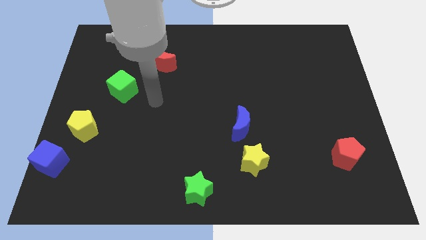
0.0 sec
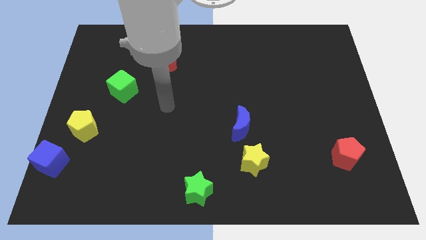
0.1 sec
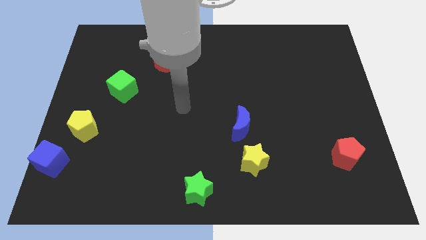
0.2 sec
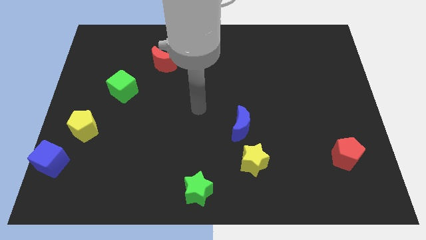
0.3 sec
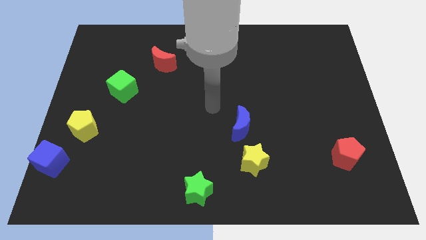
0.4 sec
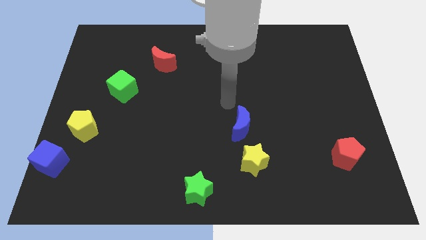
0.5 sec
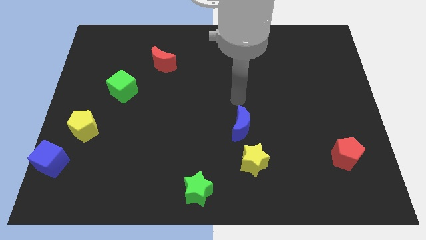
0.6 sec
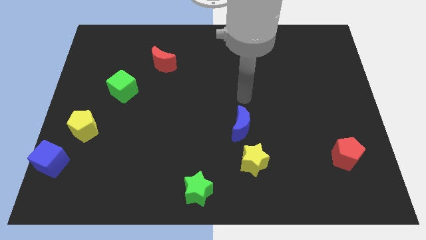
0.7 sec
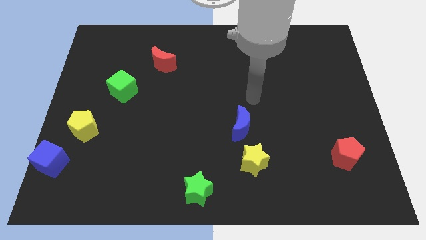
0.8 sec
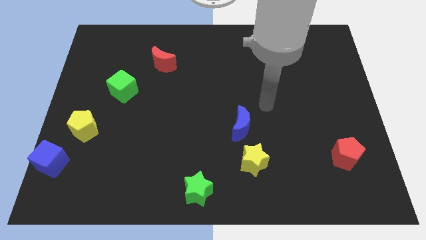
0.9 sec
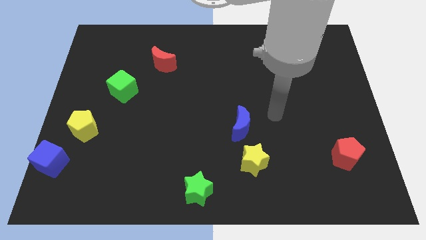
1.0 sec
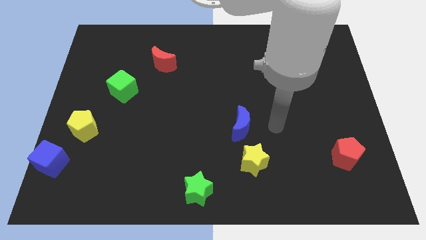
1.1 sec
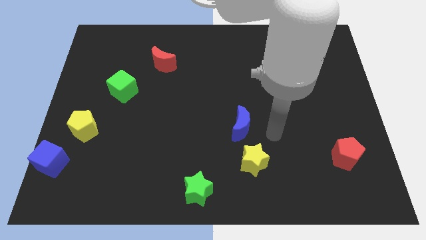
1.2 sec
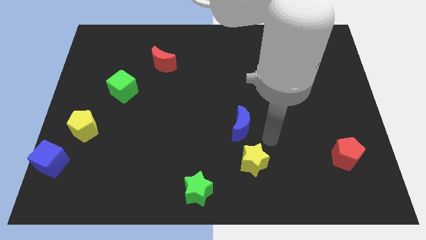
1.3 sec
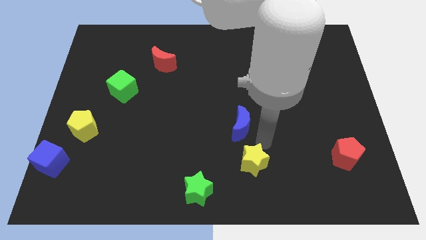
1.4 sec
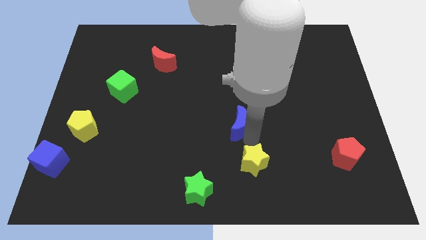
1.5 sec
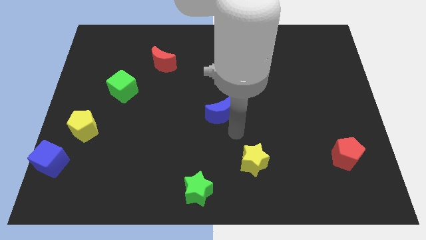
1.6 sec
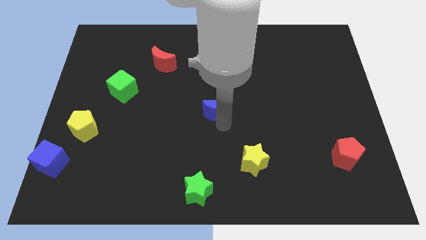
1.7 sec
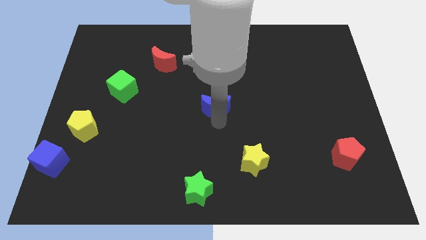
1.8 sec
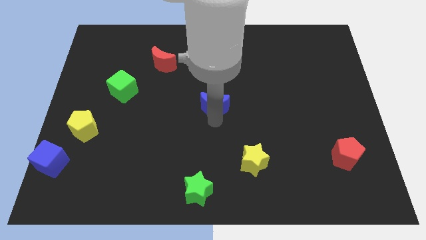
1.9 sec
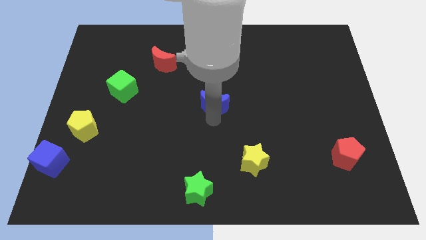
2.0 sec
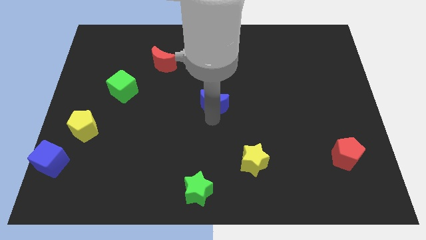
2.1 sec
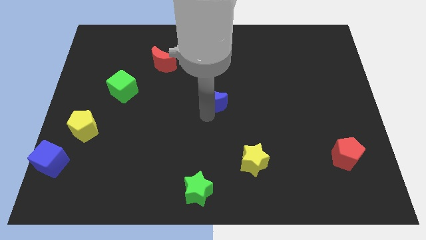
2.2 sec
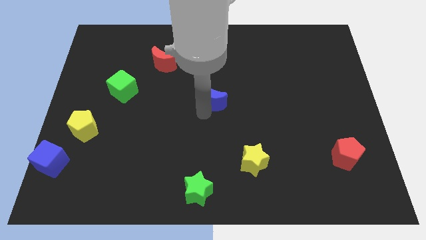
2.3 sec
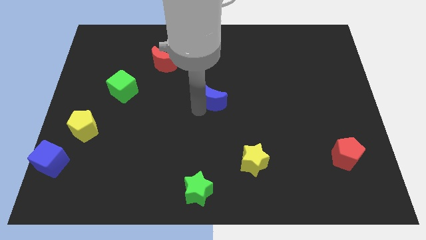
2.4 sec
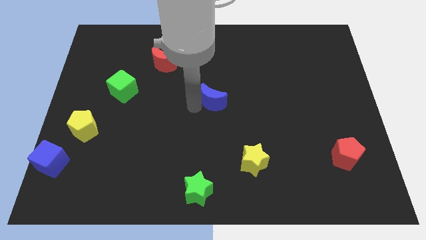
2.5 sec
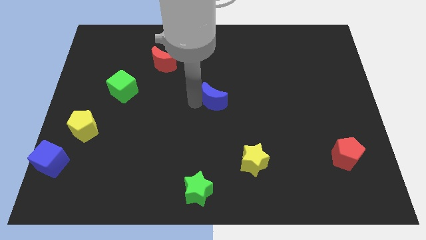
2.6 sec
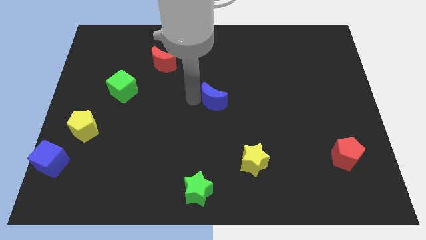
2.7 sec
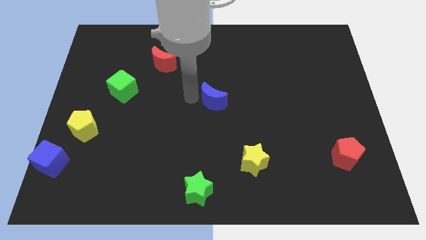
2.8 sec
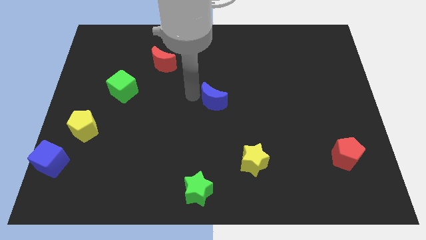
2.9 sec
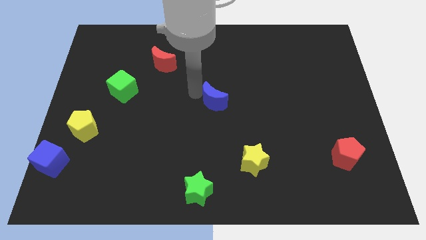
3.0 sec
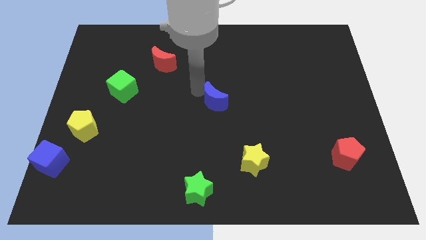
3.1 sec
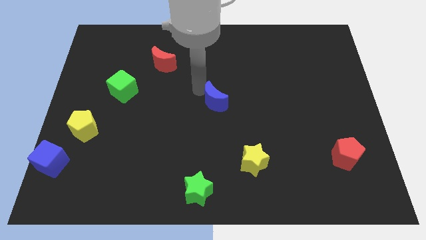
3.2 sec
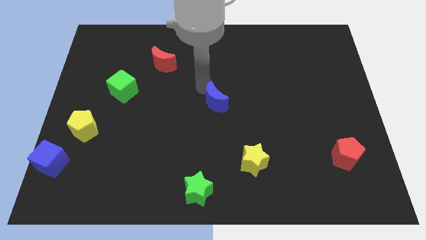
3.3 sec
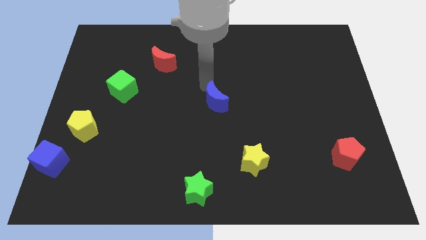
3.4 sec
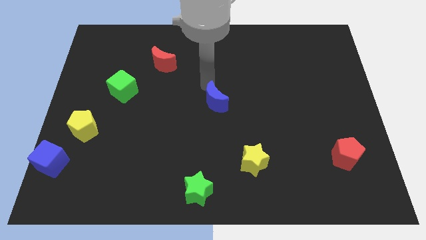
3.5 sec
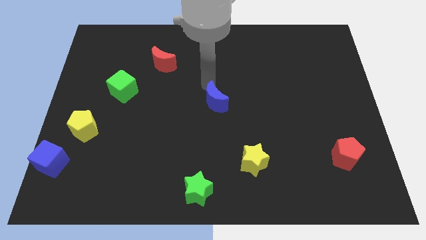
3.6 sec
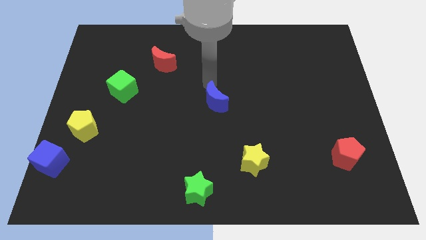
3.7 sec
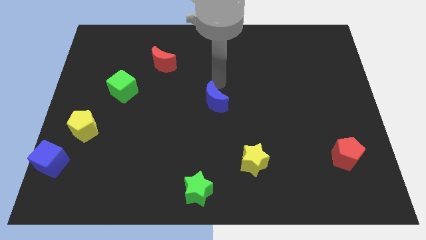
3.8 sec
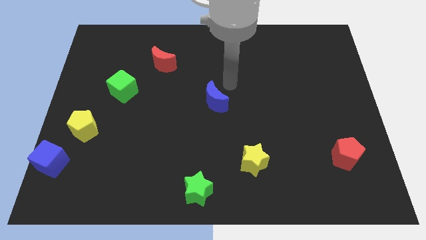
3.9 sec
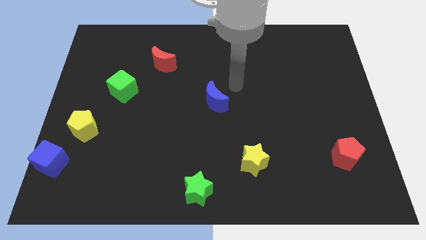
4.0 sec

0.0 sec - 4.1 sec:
place the blue crescent at the center of the board

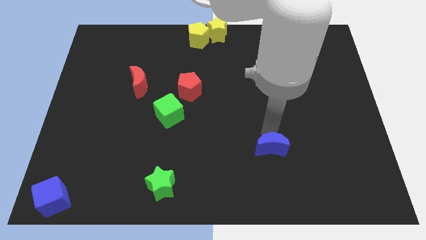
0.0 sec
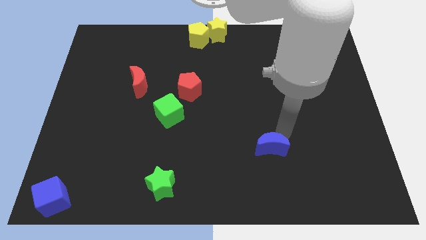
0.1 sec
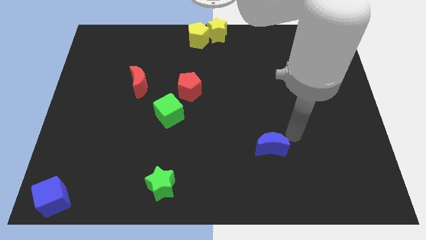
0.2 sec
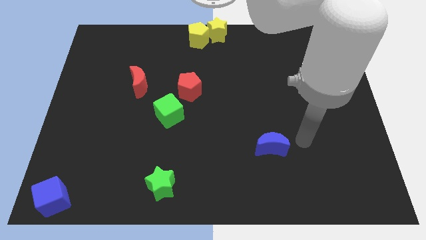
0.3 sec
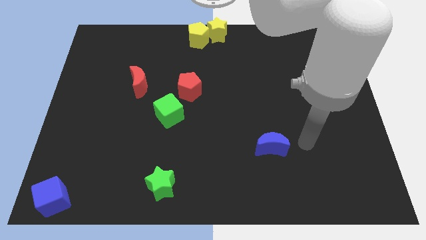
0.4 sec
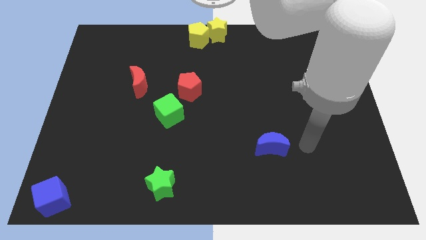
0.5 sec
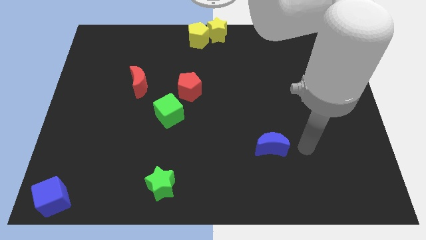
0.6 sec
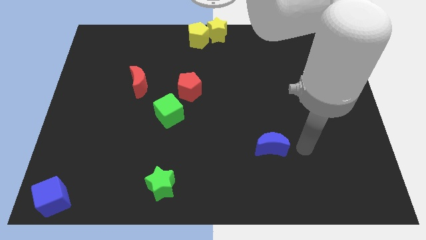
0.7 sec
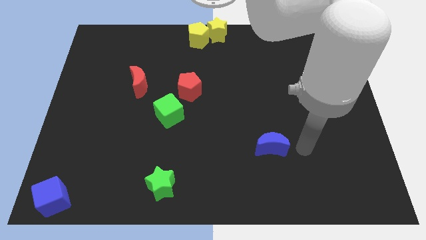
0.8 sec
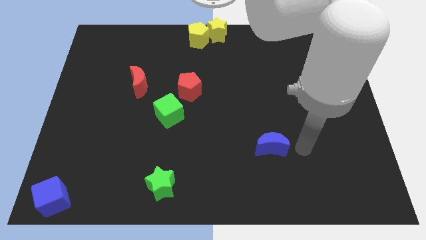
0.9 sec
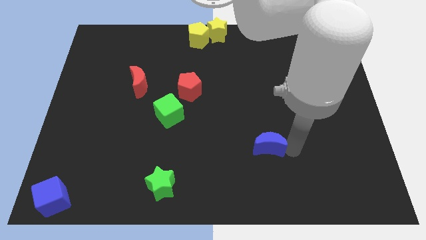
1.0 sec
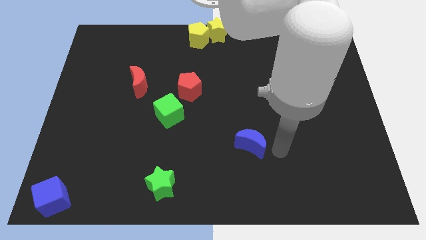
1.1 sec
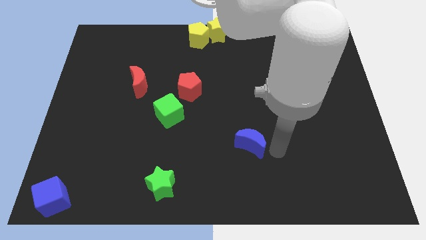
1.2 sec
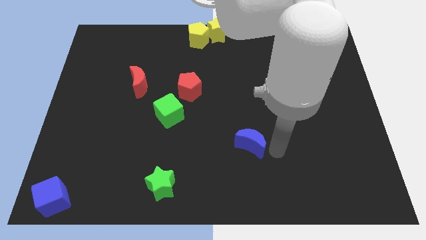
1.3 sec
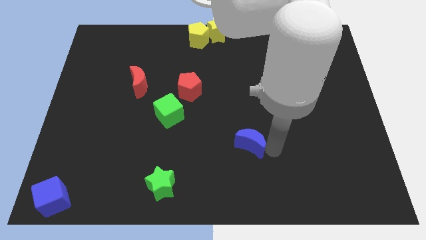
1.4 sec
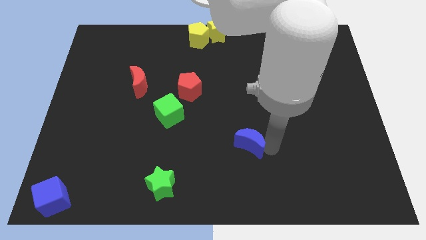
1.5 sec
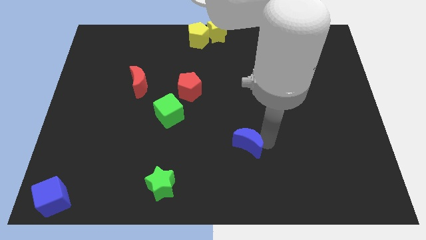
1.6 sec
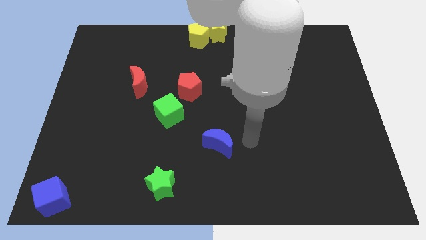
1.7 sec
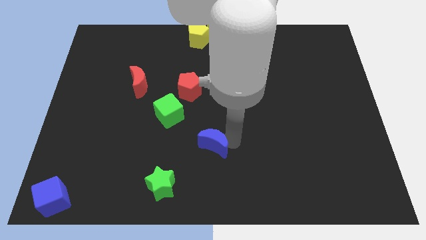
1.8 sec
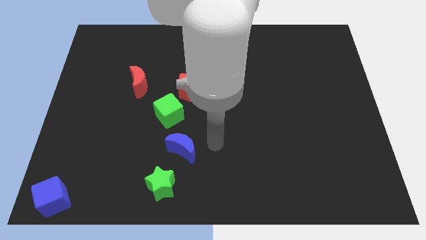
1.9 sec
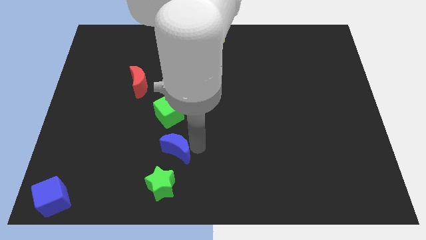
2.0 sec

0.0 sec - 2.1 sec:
move the blue moon between green blocks

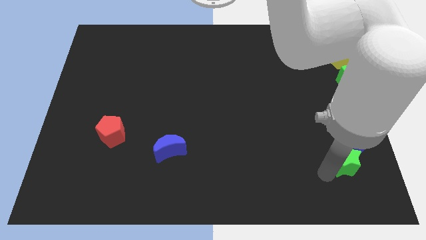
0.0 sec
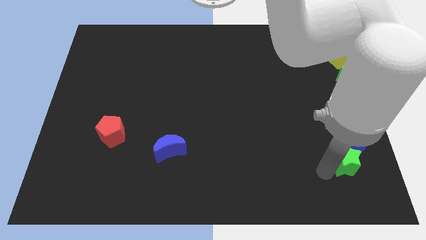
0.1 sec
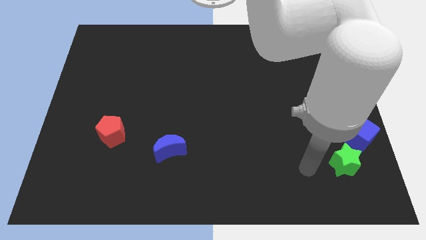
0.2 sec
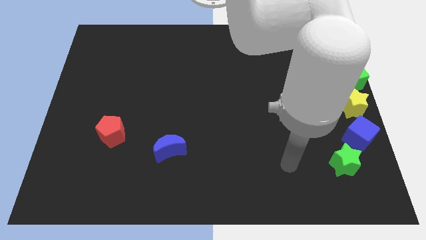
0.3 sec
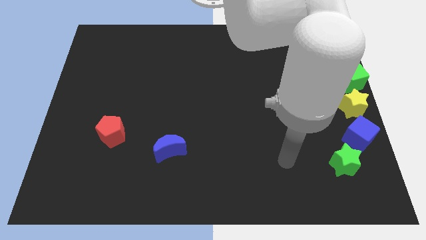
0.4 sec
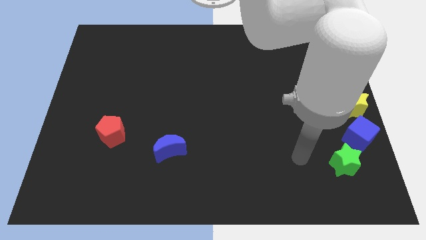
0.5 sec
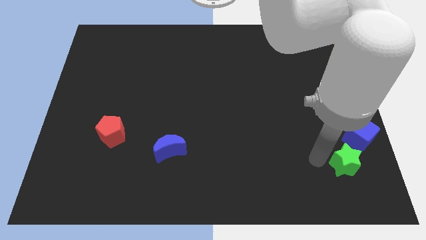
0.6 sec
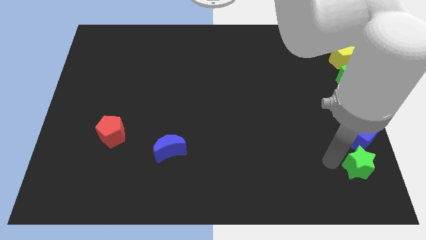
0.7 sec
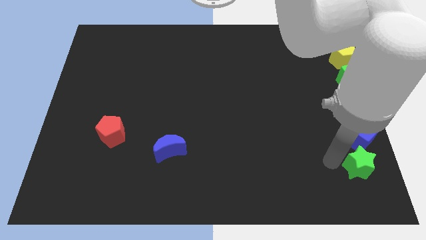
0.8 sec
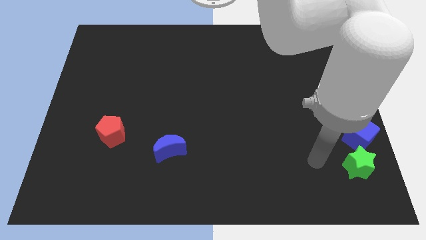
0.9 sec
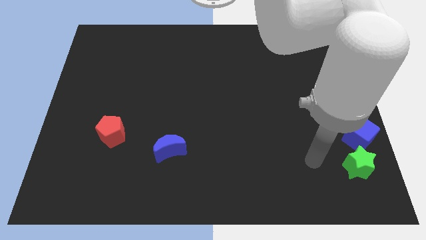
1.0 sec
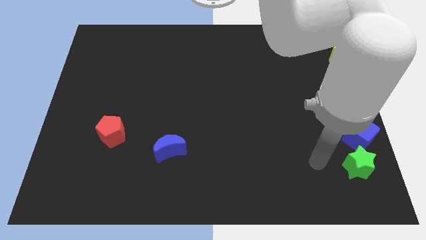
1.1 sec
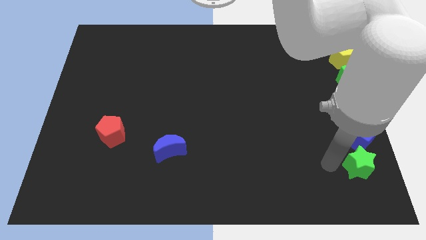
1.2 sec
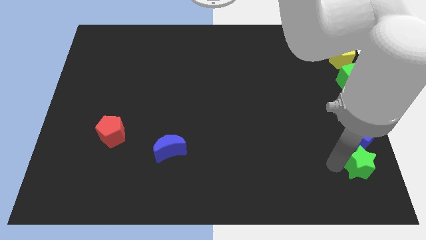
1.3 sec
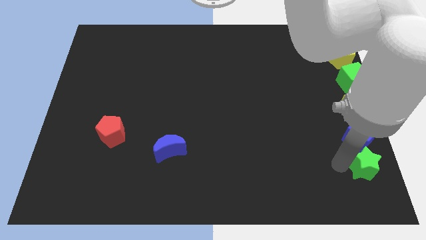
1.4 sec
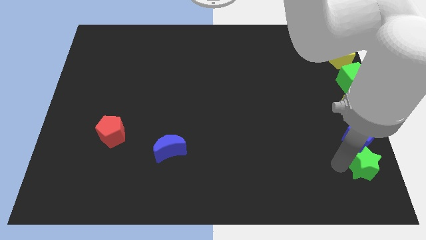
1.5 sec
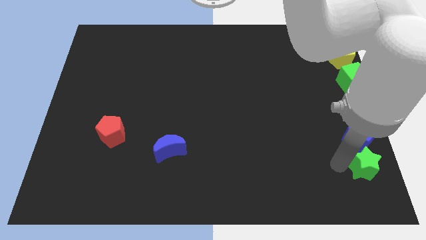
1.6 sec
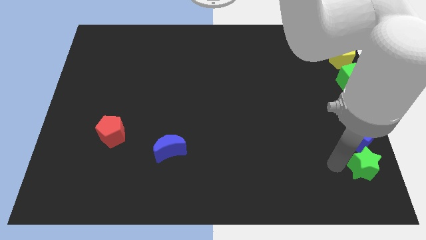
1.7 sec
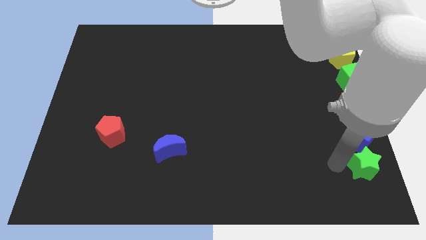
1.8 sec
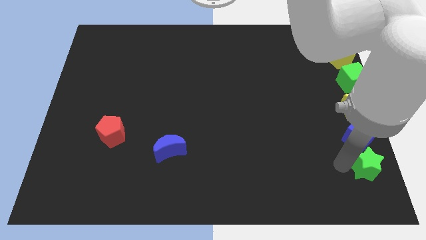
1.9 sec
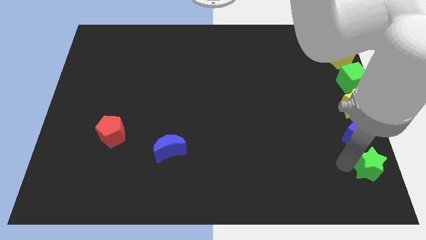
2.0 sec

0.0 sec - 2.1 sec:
place green star below blue cube

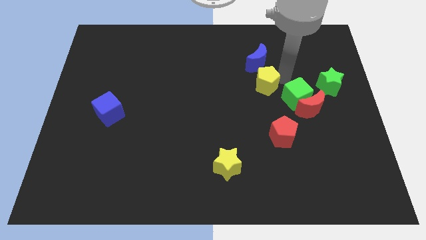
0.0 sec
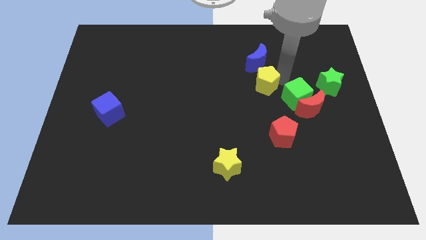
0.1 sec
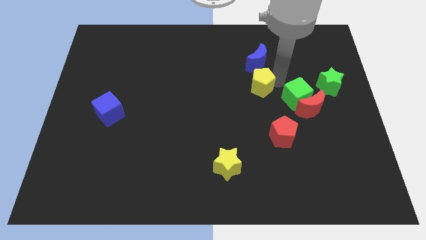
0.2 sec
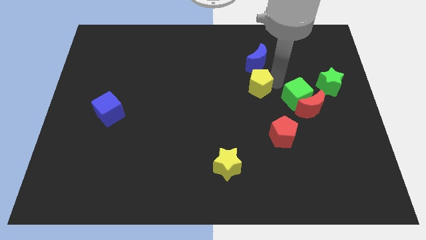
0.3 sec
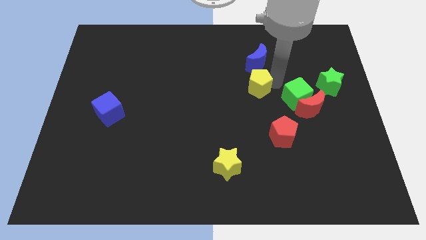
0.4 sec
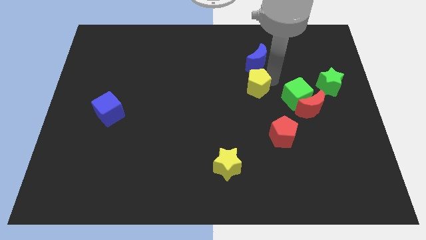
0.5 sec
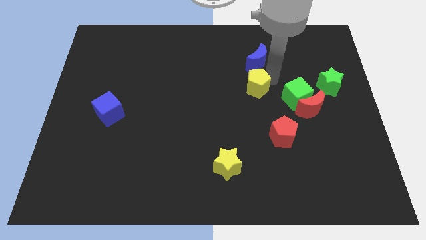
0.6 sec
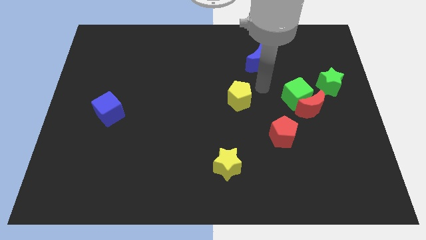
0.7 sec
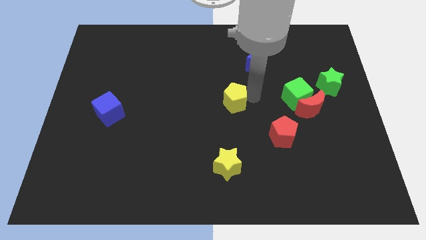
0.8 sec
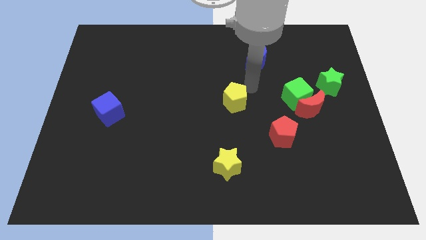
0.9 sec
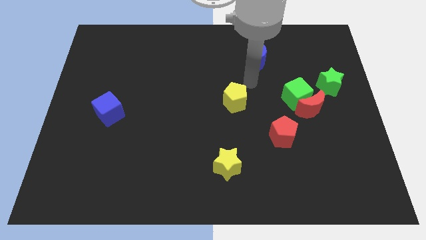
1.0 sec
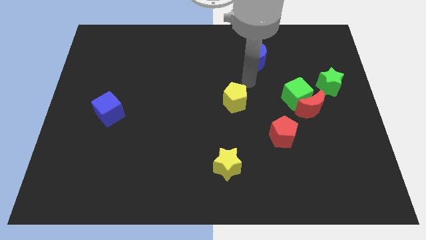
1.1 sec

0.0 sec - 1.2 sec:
place the yellow pentagon to the left of the green cube
